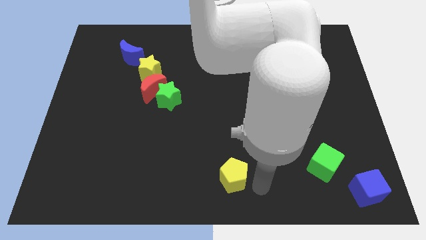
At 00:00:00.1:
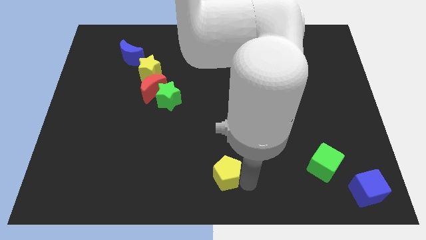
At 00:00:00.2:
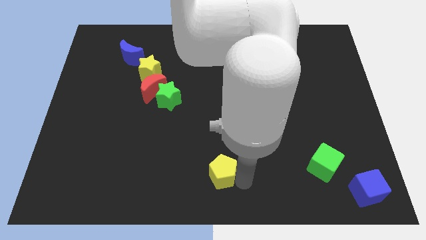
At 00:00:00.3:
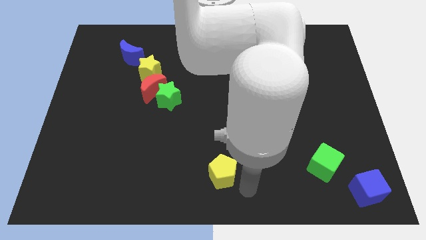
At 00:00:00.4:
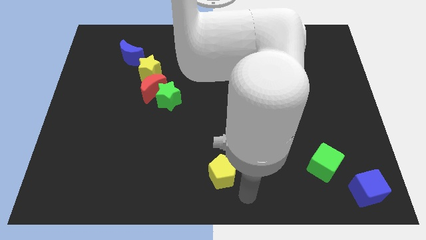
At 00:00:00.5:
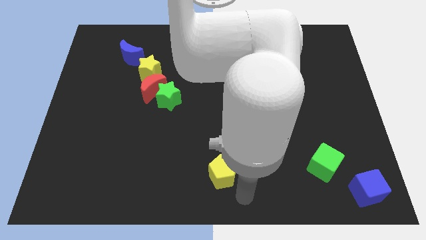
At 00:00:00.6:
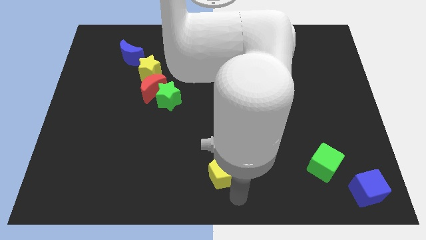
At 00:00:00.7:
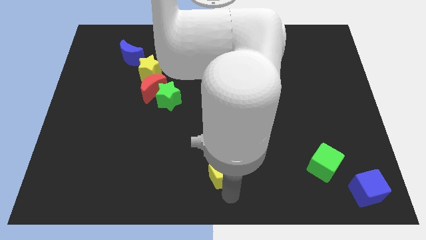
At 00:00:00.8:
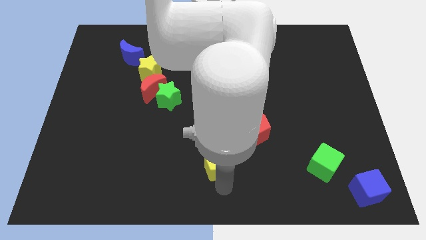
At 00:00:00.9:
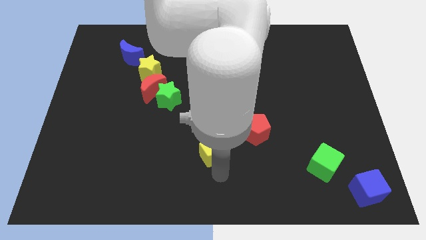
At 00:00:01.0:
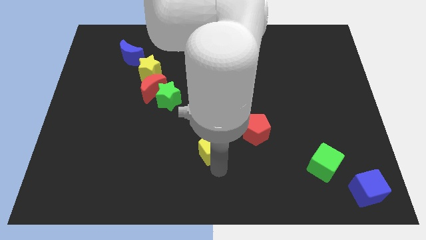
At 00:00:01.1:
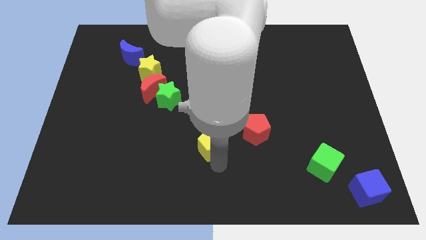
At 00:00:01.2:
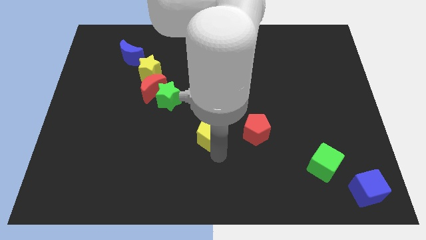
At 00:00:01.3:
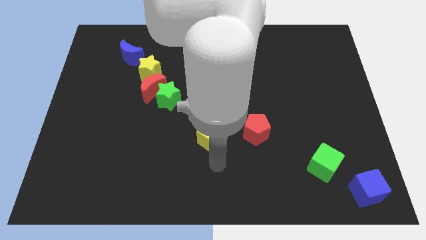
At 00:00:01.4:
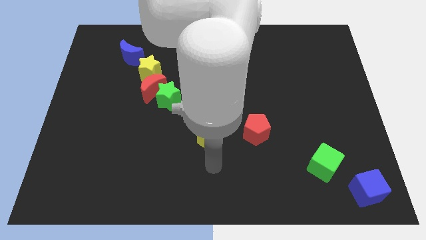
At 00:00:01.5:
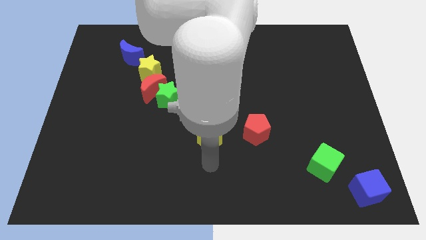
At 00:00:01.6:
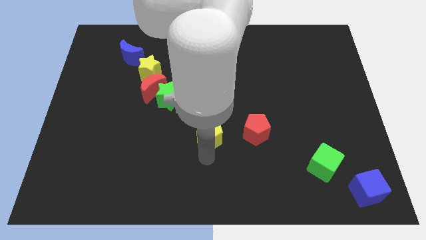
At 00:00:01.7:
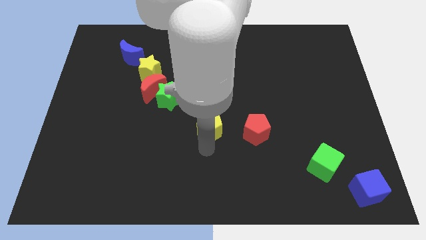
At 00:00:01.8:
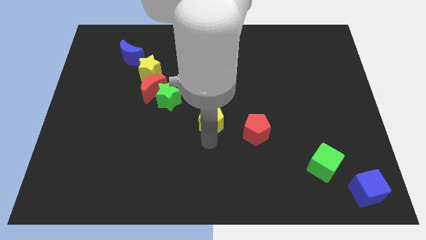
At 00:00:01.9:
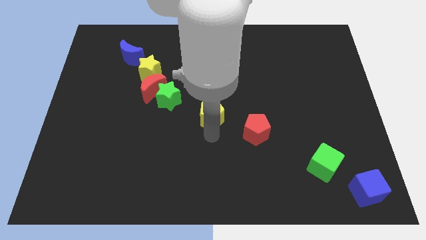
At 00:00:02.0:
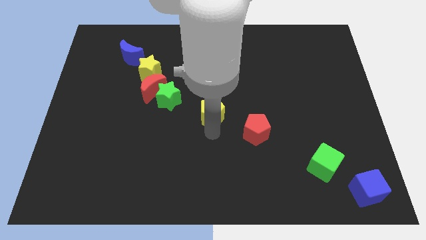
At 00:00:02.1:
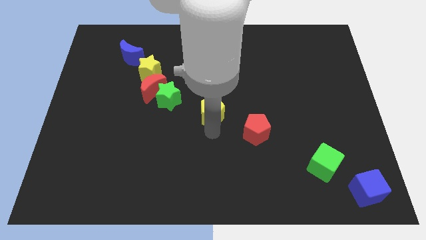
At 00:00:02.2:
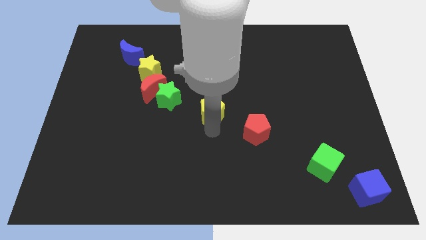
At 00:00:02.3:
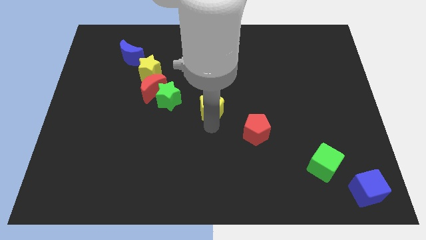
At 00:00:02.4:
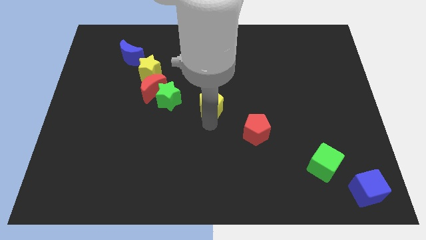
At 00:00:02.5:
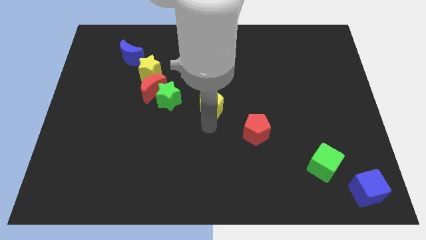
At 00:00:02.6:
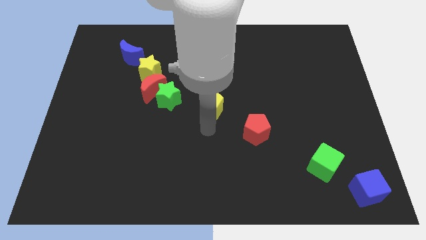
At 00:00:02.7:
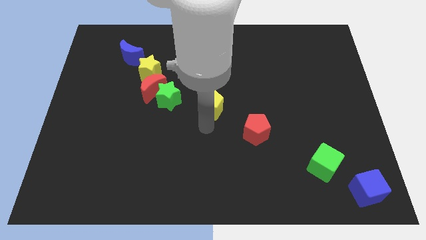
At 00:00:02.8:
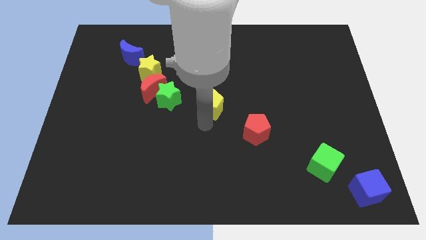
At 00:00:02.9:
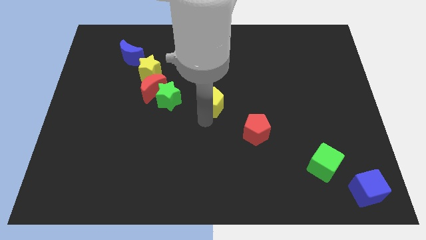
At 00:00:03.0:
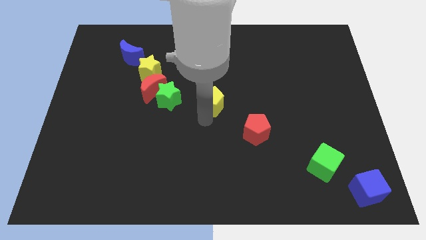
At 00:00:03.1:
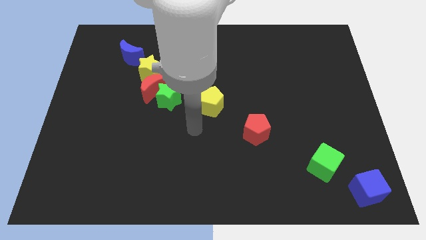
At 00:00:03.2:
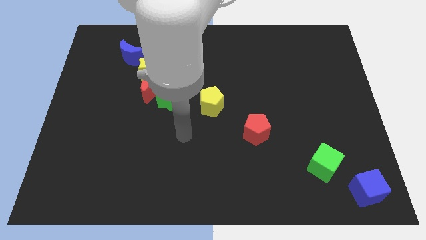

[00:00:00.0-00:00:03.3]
place the yellow pentagon at the bottom right of the green star

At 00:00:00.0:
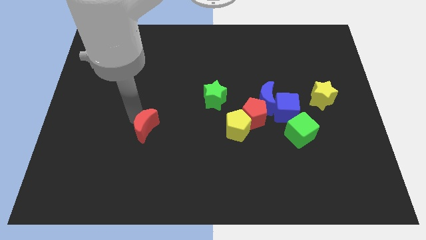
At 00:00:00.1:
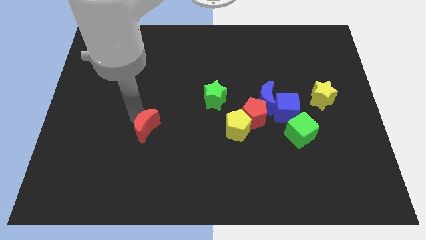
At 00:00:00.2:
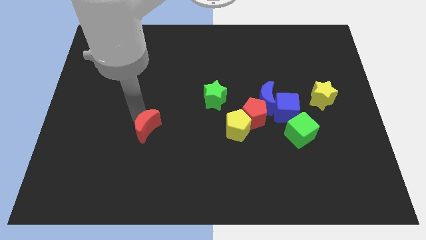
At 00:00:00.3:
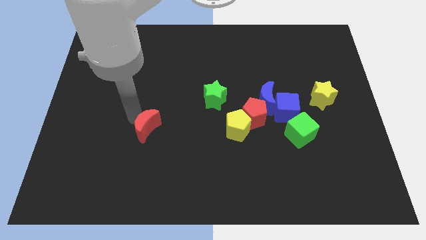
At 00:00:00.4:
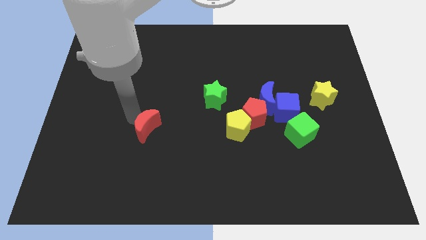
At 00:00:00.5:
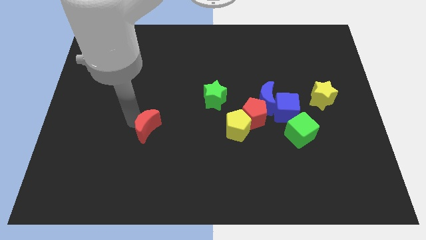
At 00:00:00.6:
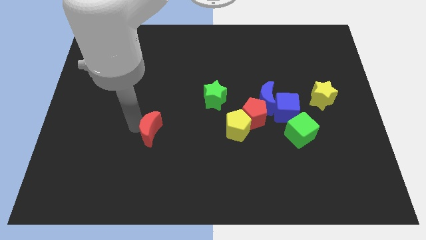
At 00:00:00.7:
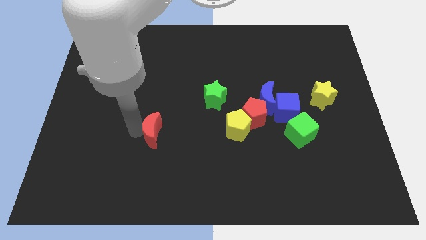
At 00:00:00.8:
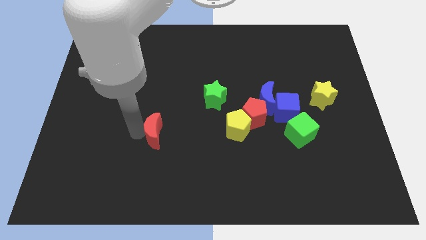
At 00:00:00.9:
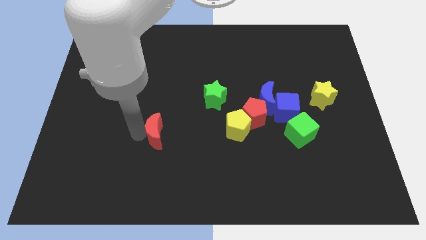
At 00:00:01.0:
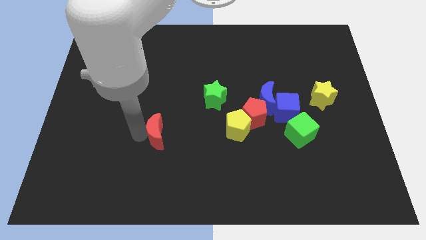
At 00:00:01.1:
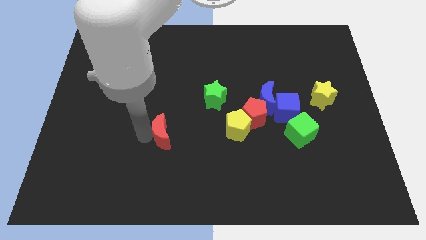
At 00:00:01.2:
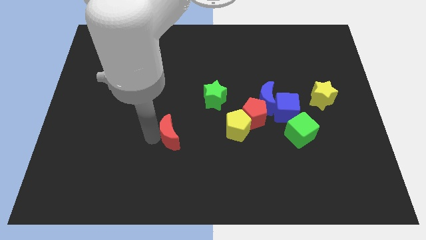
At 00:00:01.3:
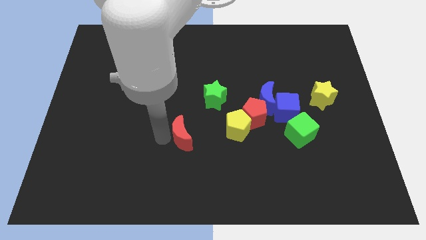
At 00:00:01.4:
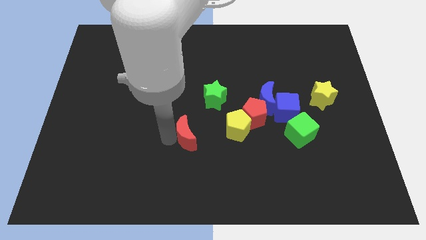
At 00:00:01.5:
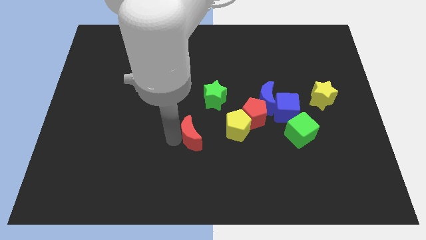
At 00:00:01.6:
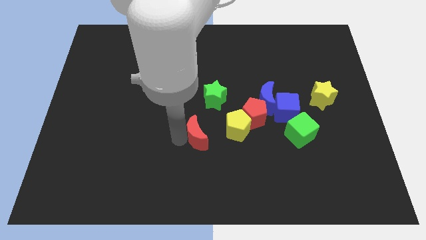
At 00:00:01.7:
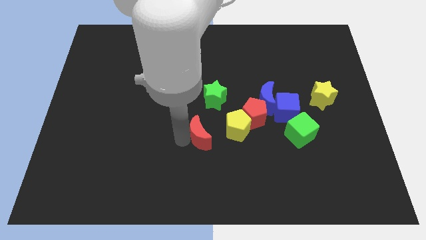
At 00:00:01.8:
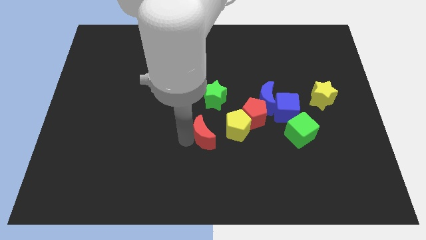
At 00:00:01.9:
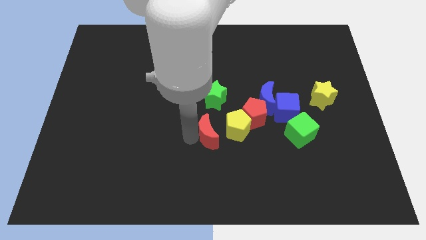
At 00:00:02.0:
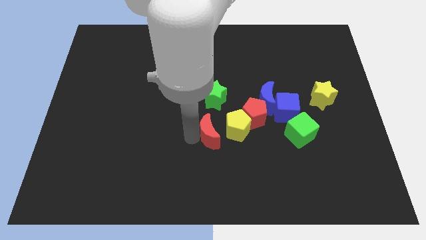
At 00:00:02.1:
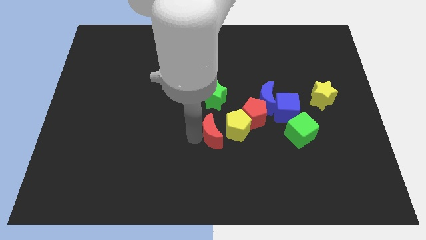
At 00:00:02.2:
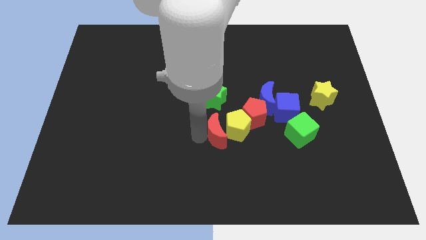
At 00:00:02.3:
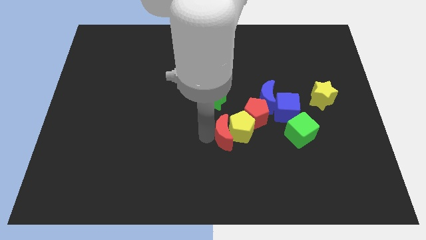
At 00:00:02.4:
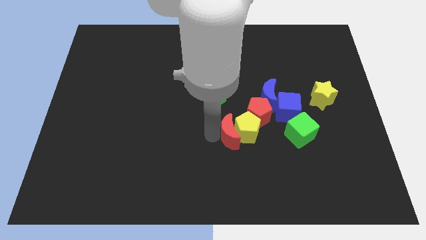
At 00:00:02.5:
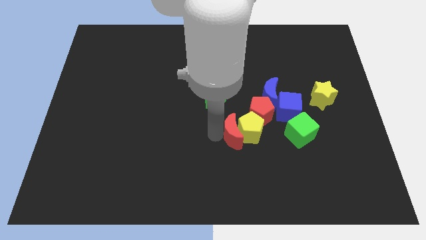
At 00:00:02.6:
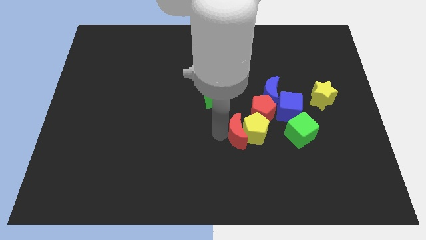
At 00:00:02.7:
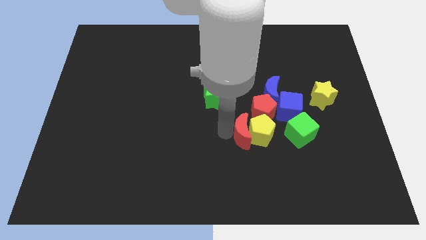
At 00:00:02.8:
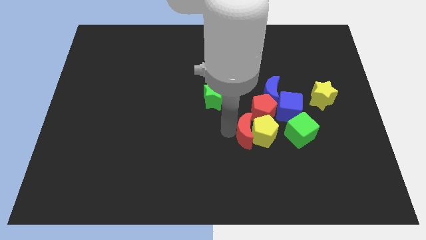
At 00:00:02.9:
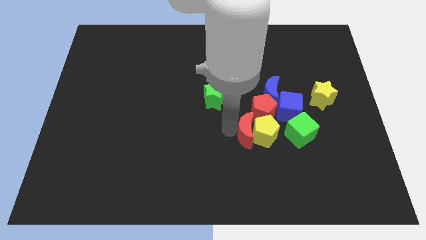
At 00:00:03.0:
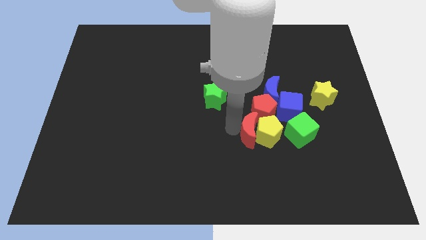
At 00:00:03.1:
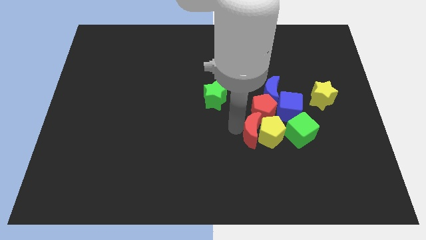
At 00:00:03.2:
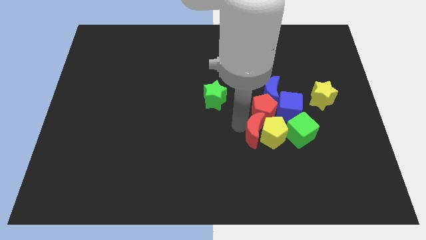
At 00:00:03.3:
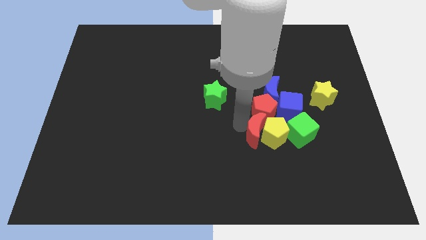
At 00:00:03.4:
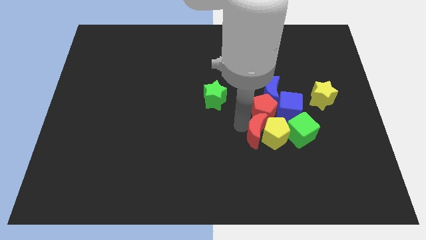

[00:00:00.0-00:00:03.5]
move the red crescent and yellow pentagon together into the green cube

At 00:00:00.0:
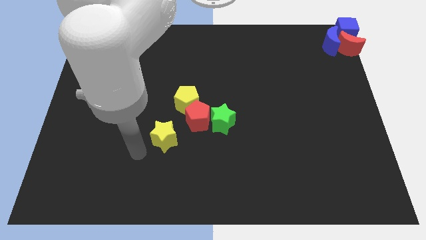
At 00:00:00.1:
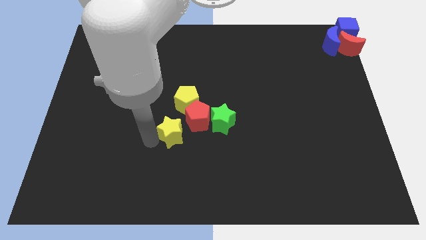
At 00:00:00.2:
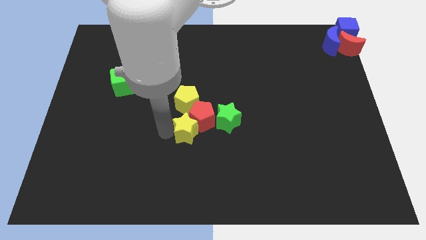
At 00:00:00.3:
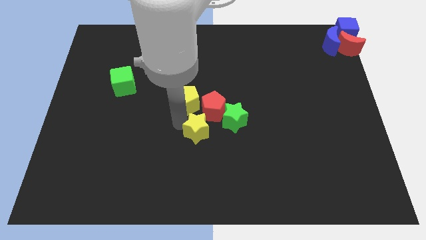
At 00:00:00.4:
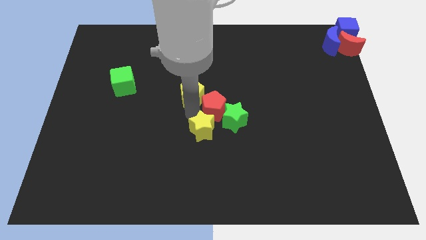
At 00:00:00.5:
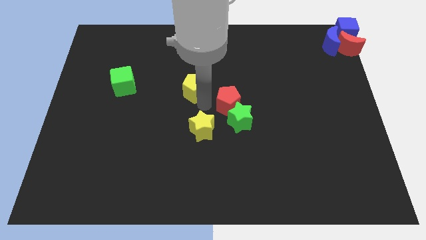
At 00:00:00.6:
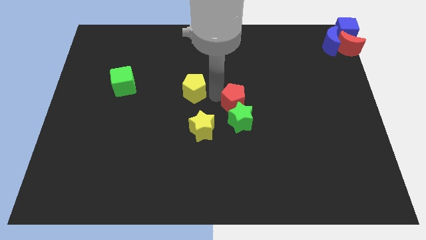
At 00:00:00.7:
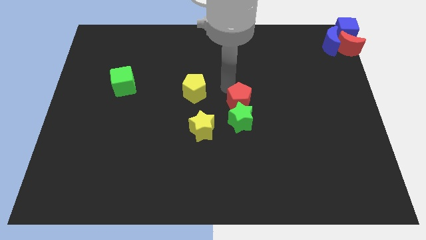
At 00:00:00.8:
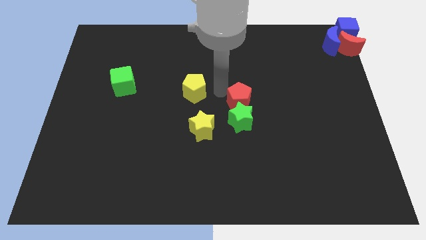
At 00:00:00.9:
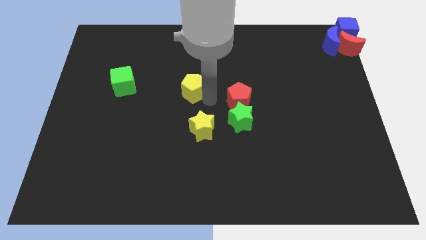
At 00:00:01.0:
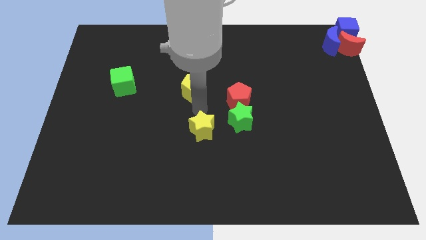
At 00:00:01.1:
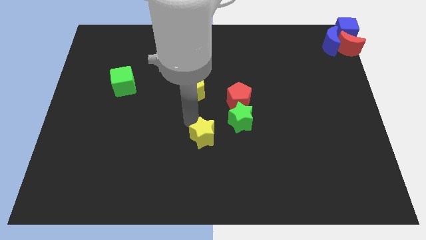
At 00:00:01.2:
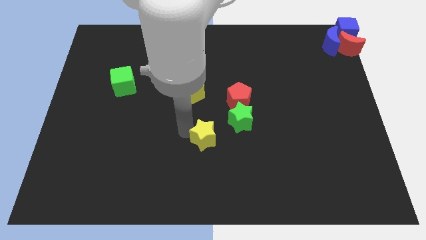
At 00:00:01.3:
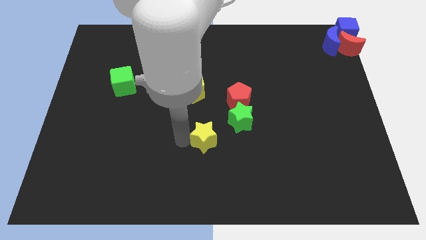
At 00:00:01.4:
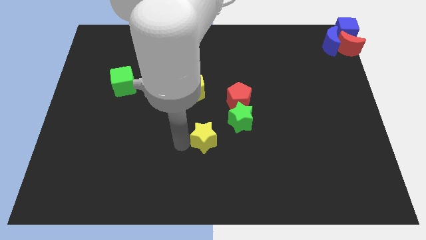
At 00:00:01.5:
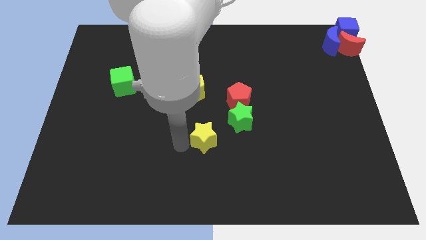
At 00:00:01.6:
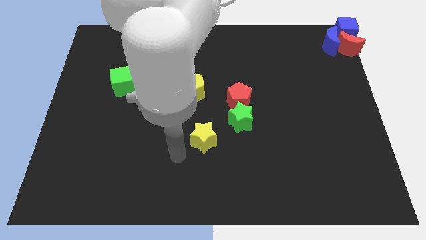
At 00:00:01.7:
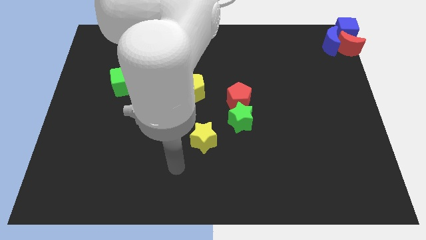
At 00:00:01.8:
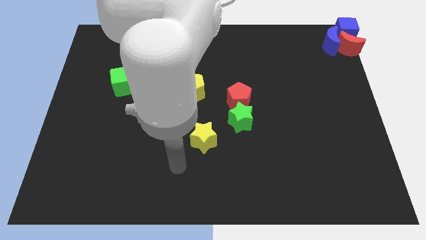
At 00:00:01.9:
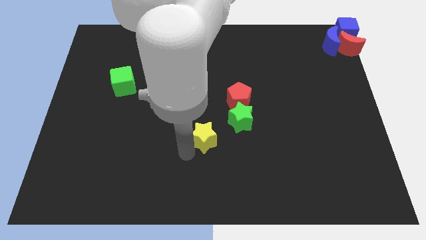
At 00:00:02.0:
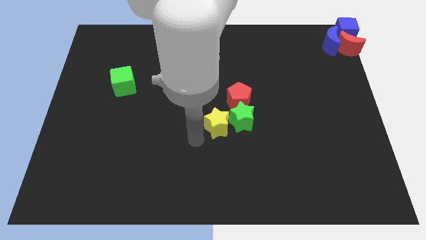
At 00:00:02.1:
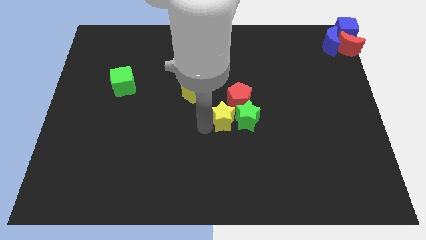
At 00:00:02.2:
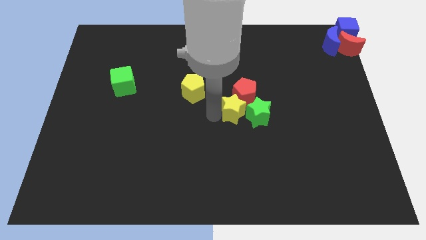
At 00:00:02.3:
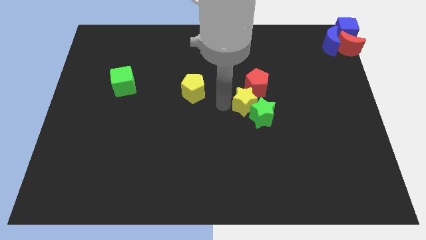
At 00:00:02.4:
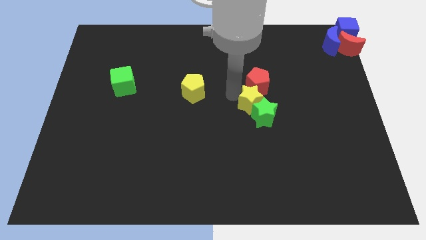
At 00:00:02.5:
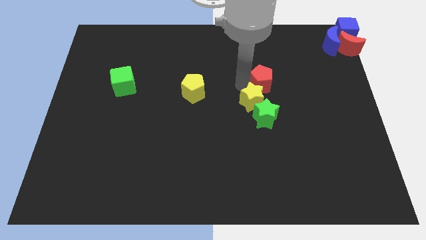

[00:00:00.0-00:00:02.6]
move the yellow star into the red pentagon
